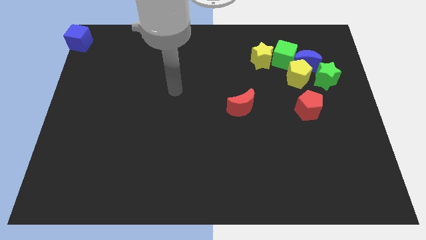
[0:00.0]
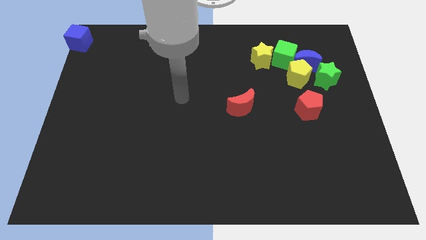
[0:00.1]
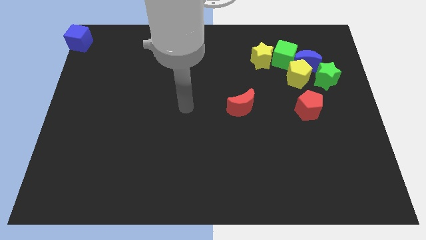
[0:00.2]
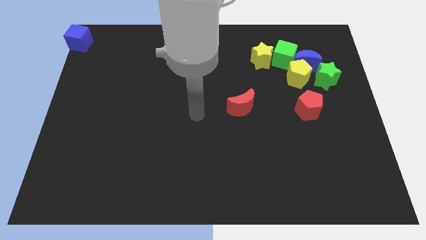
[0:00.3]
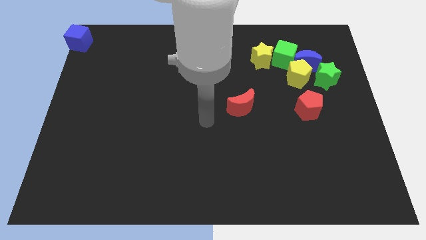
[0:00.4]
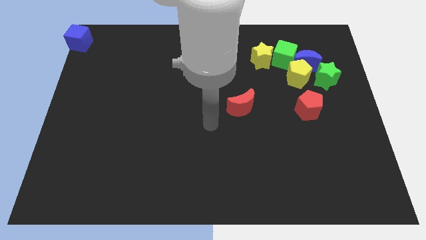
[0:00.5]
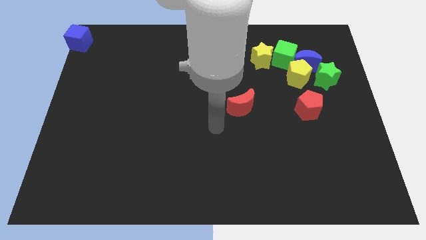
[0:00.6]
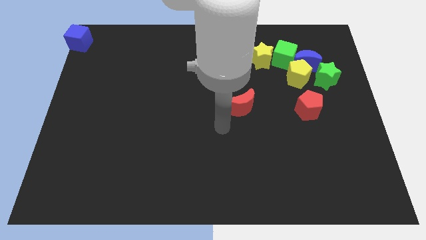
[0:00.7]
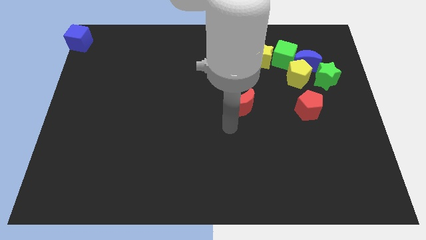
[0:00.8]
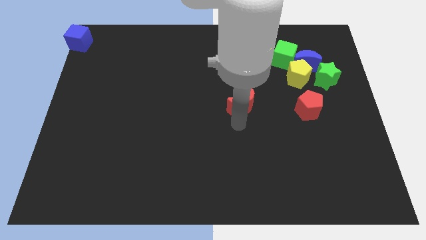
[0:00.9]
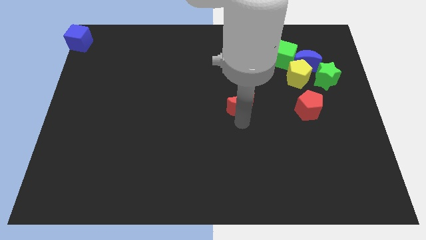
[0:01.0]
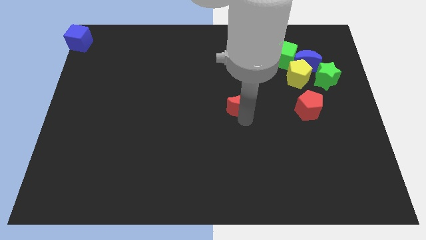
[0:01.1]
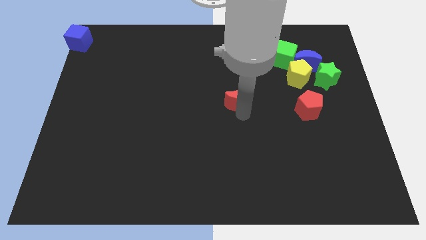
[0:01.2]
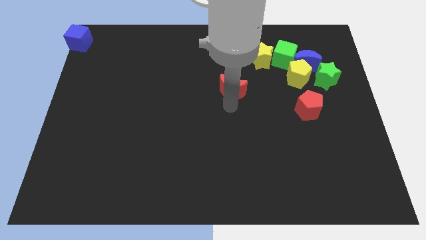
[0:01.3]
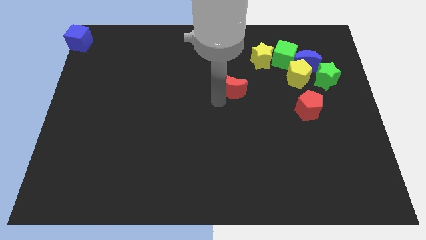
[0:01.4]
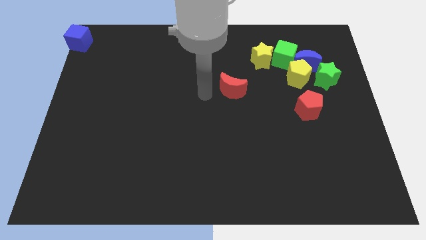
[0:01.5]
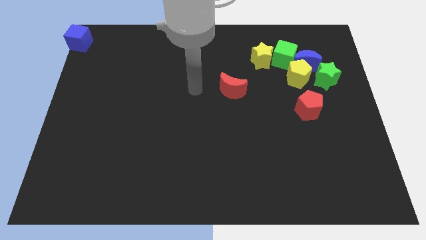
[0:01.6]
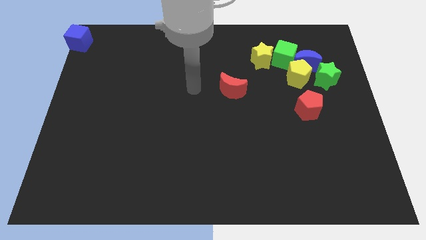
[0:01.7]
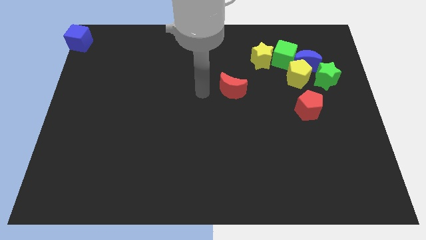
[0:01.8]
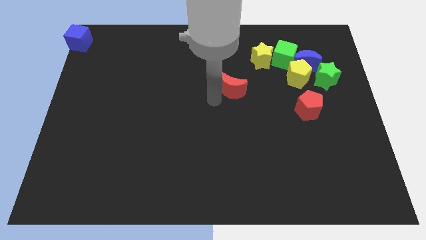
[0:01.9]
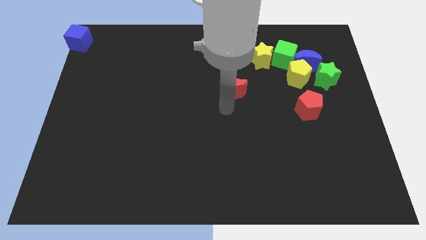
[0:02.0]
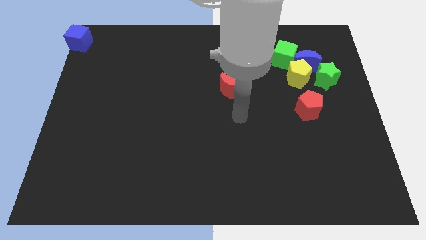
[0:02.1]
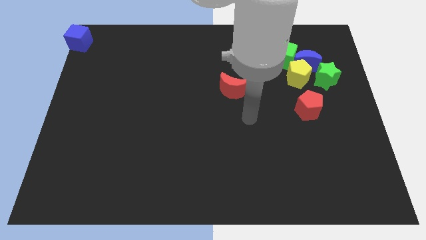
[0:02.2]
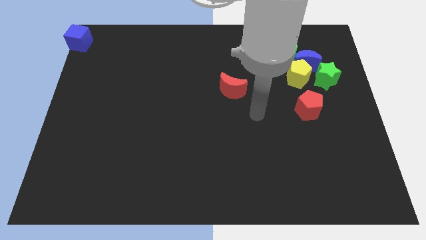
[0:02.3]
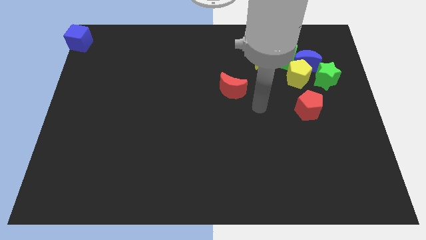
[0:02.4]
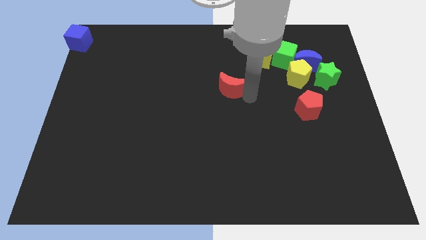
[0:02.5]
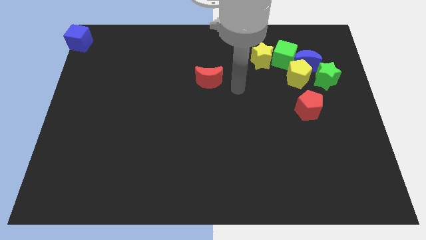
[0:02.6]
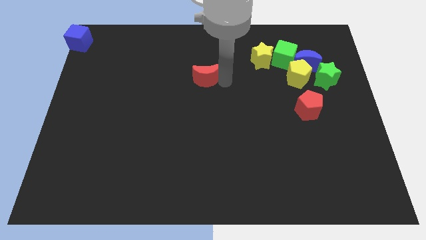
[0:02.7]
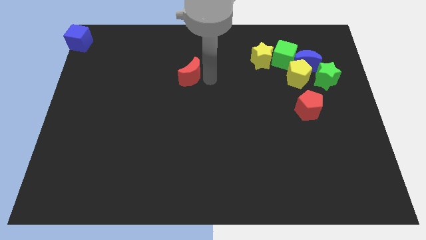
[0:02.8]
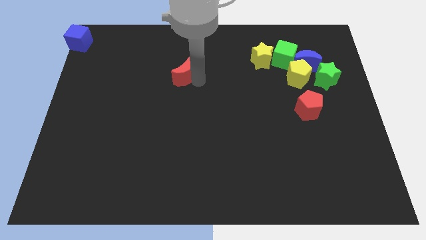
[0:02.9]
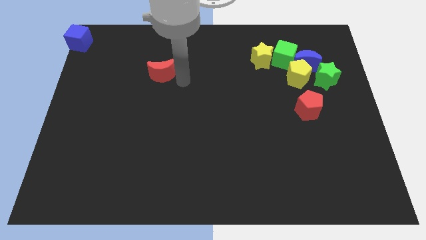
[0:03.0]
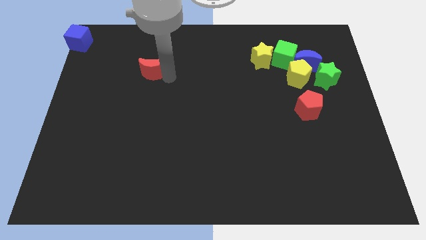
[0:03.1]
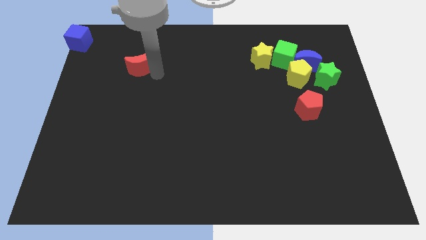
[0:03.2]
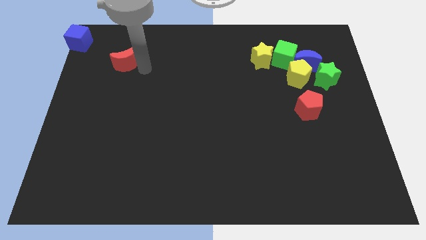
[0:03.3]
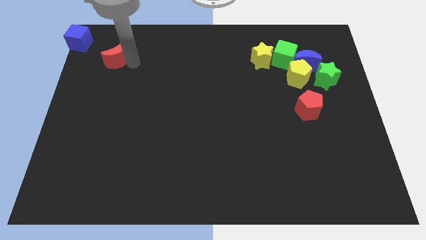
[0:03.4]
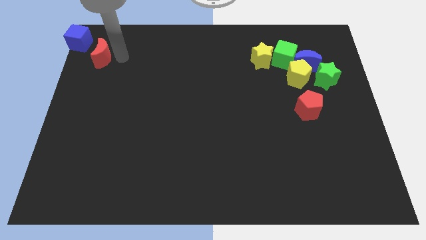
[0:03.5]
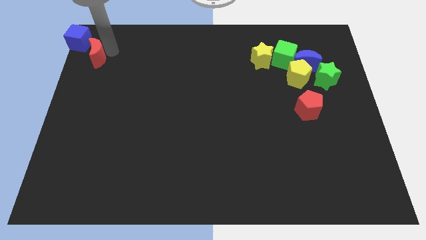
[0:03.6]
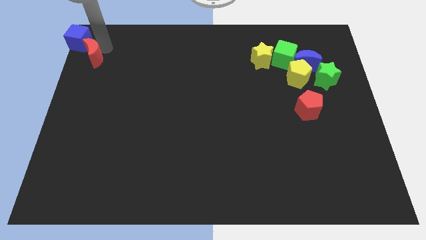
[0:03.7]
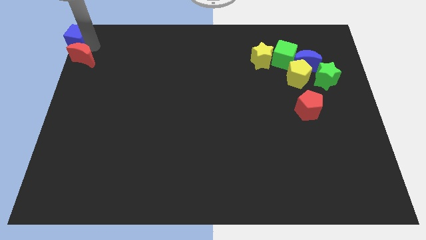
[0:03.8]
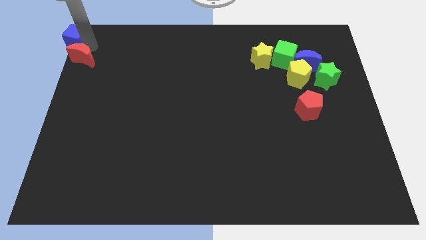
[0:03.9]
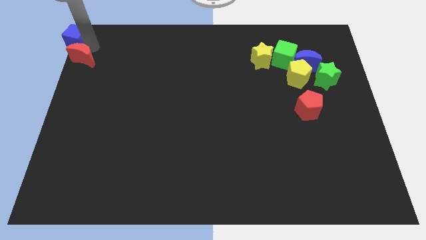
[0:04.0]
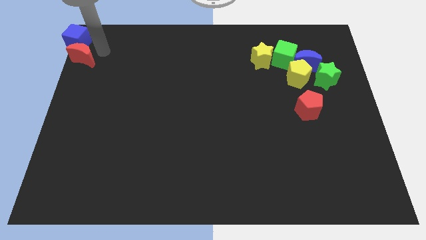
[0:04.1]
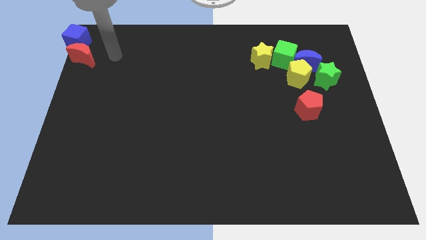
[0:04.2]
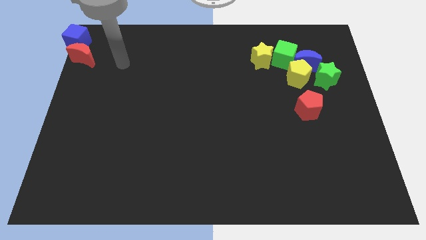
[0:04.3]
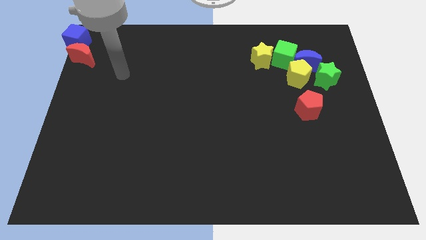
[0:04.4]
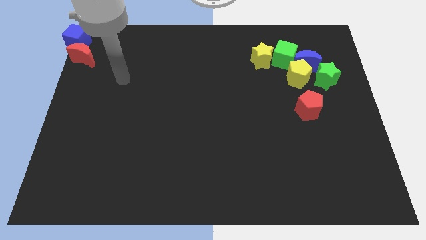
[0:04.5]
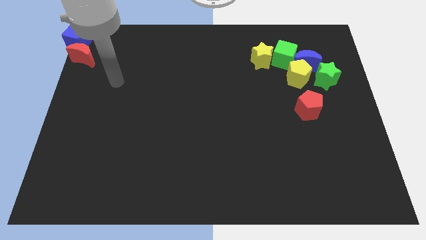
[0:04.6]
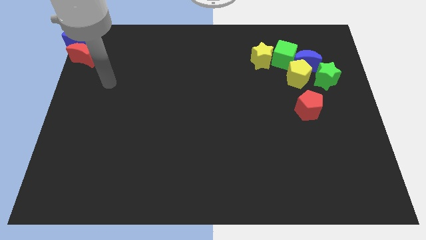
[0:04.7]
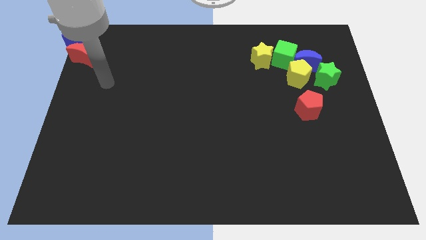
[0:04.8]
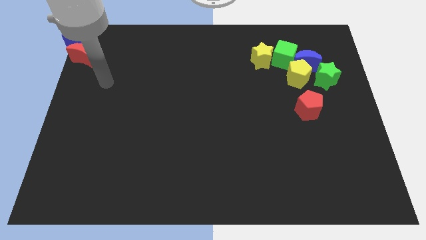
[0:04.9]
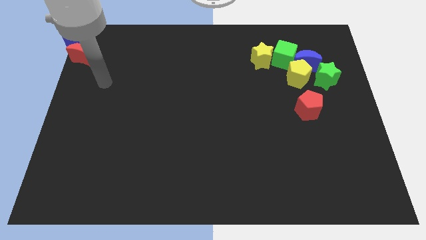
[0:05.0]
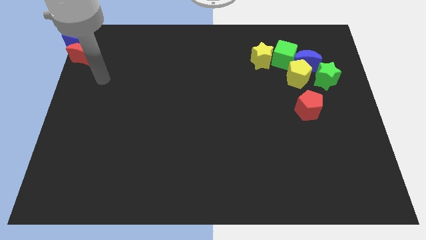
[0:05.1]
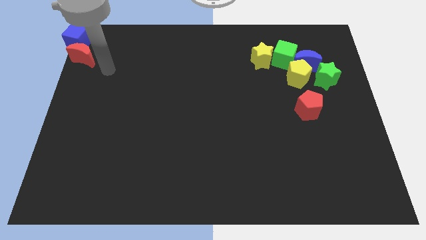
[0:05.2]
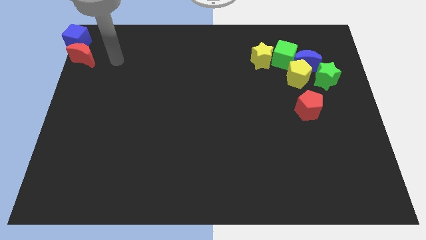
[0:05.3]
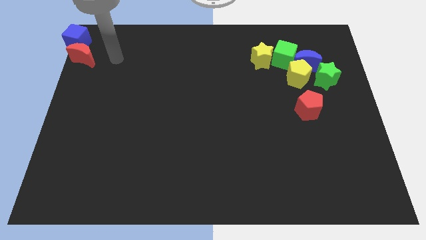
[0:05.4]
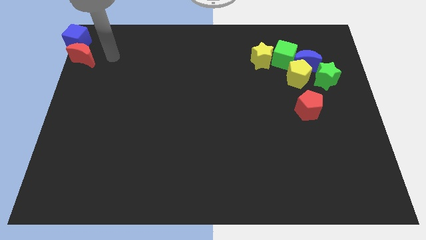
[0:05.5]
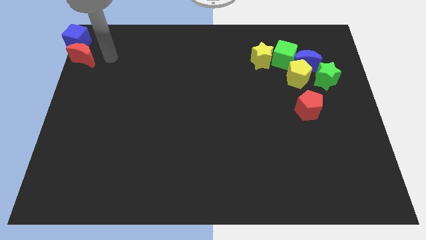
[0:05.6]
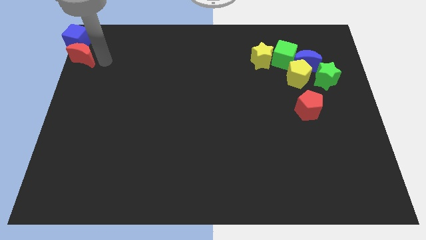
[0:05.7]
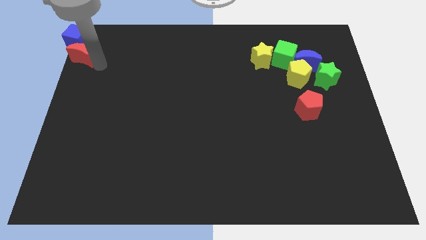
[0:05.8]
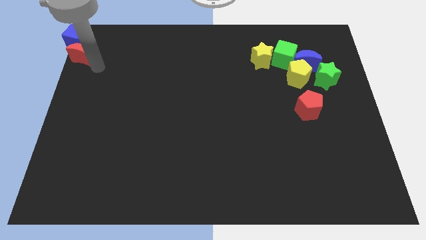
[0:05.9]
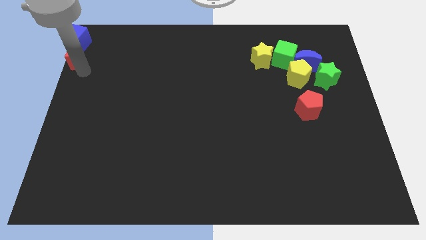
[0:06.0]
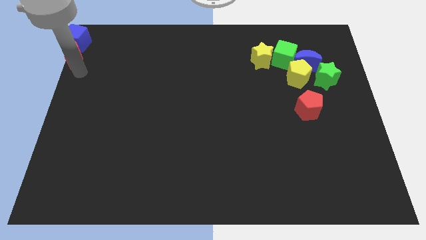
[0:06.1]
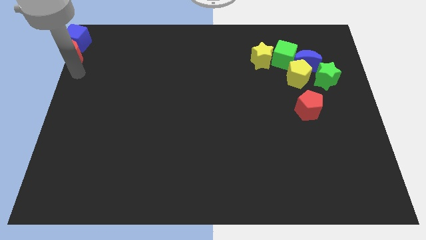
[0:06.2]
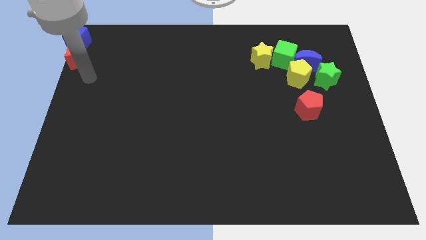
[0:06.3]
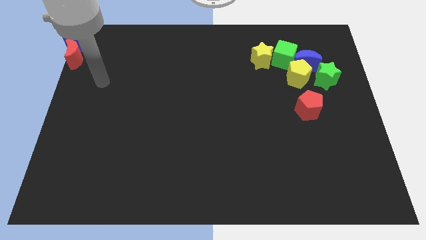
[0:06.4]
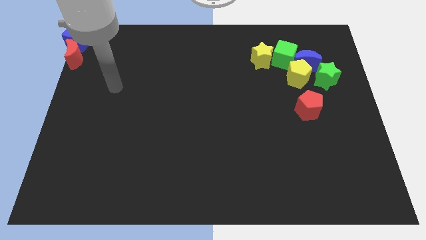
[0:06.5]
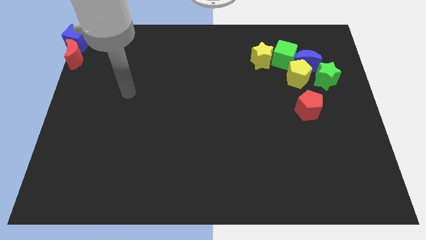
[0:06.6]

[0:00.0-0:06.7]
place the red moon to the bottom side of the blue cube

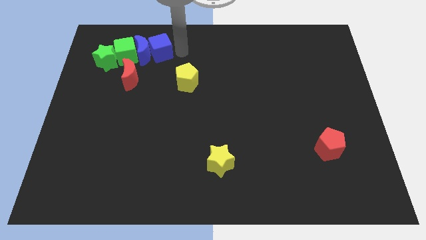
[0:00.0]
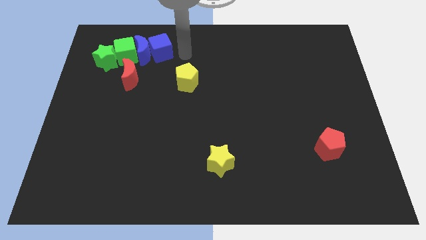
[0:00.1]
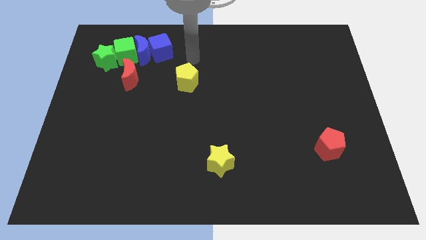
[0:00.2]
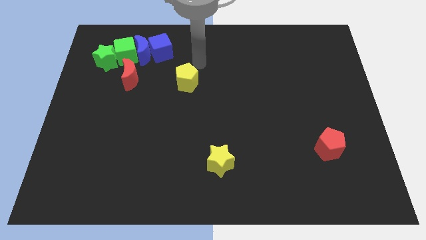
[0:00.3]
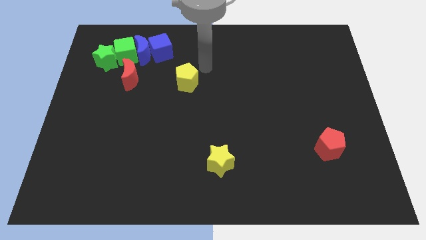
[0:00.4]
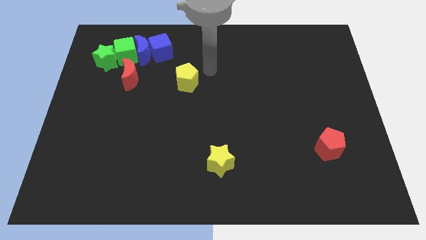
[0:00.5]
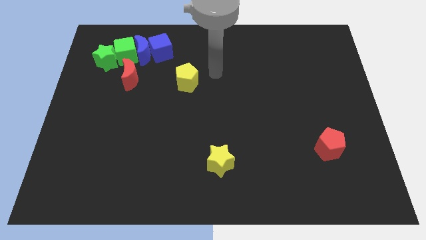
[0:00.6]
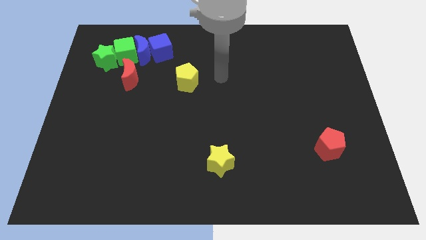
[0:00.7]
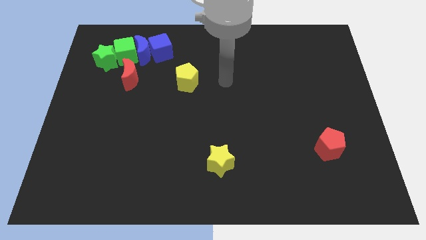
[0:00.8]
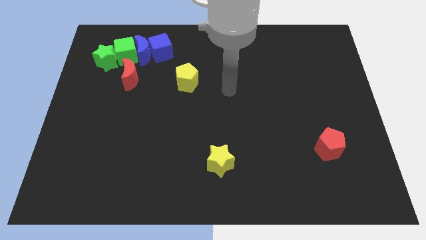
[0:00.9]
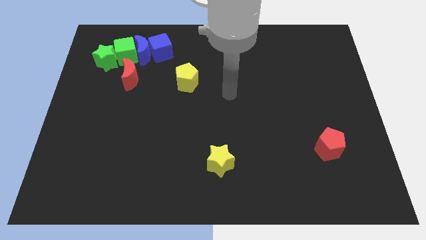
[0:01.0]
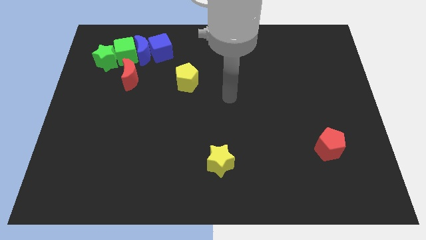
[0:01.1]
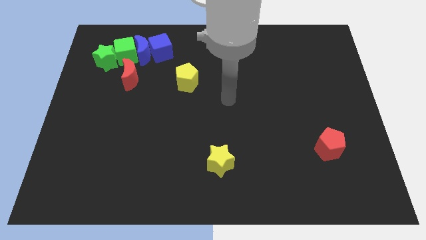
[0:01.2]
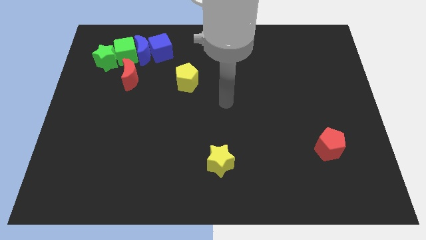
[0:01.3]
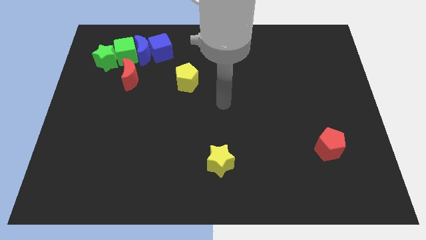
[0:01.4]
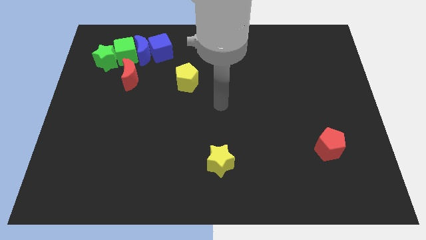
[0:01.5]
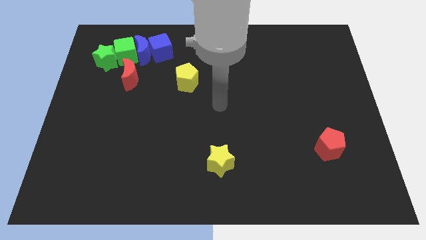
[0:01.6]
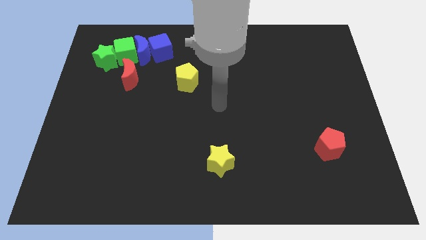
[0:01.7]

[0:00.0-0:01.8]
move your hand towards the center of the board

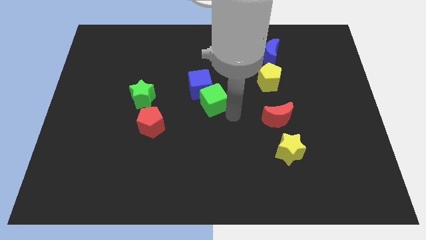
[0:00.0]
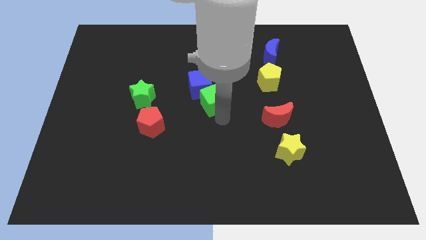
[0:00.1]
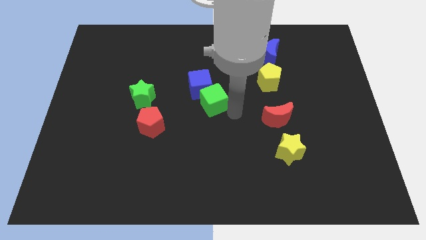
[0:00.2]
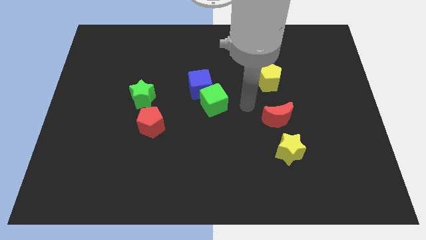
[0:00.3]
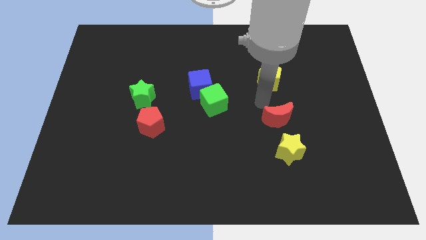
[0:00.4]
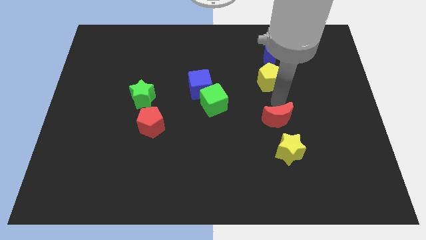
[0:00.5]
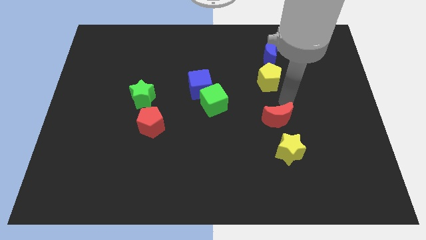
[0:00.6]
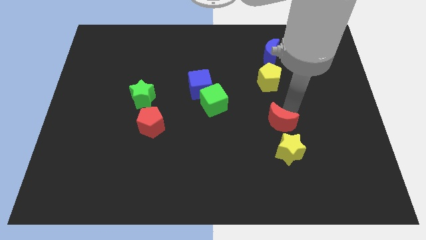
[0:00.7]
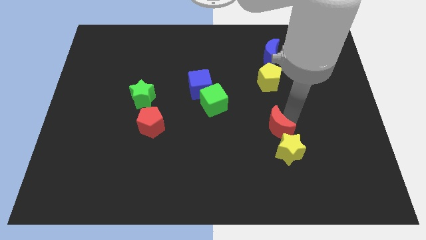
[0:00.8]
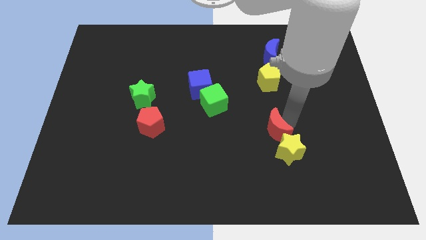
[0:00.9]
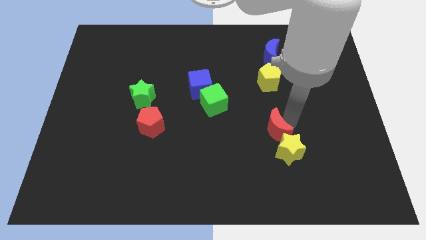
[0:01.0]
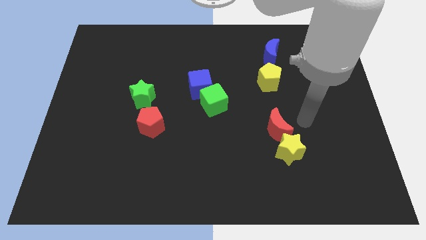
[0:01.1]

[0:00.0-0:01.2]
push red crescent slightly towards yellow star
